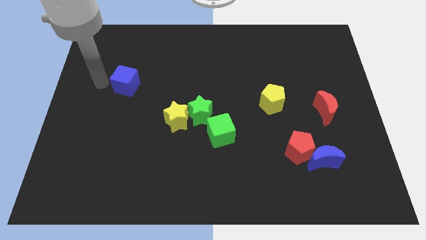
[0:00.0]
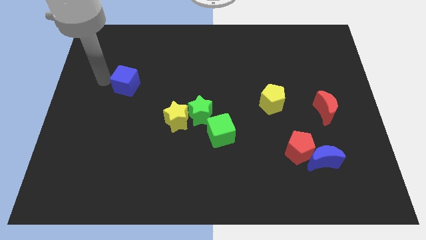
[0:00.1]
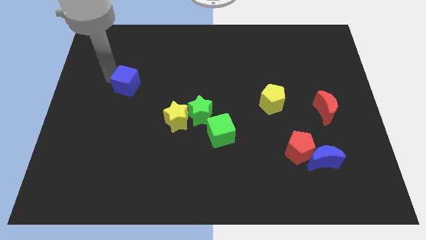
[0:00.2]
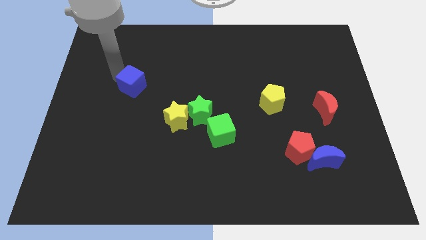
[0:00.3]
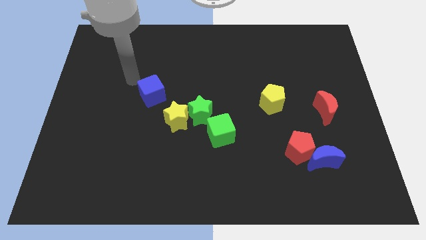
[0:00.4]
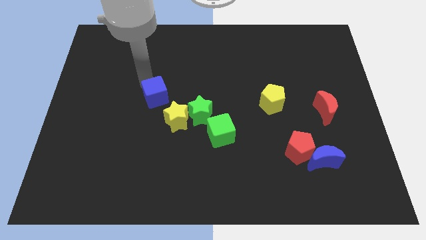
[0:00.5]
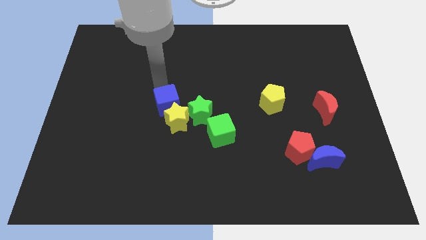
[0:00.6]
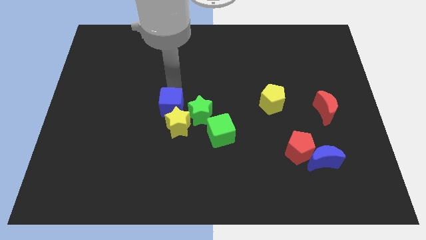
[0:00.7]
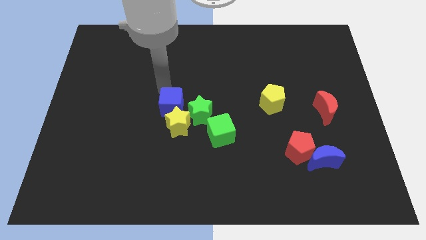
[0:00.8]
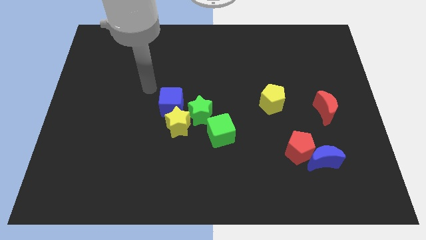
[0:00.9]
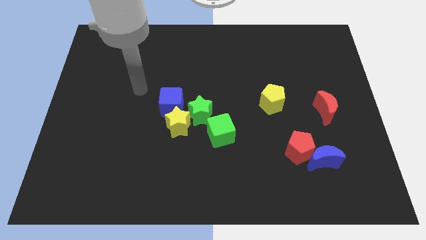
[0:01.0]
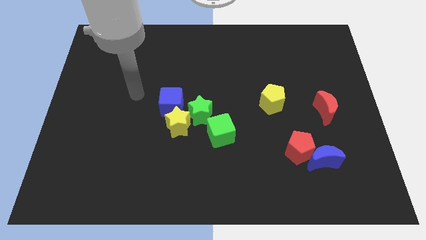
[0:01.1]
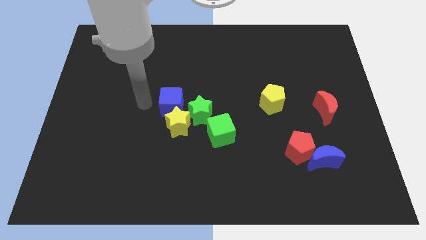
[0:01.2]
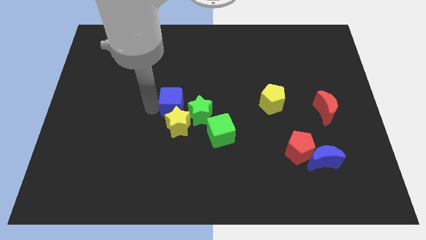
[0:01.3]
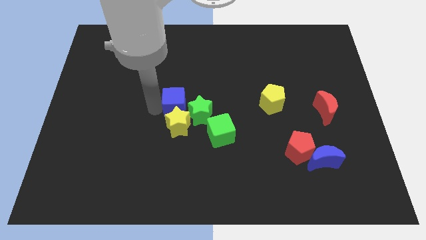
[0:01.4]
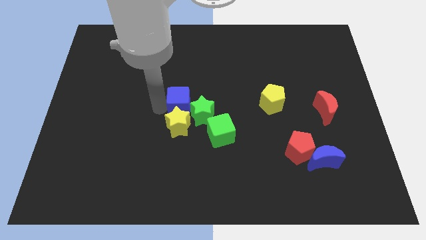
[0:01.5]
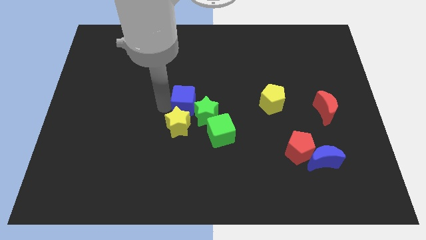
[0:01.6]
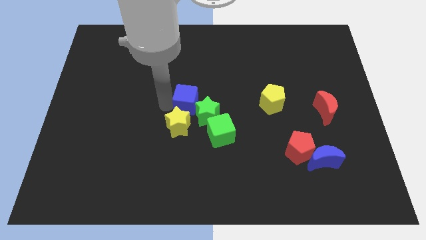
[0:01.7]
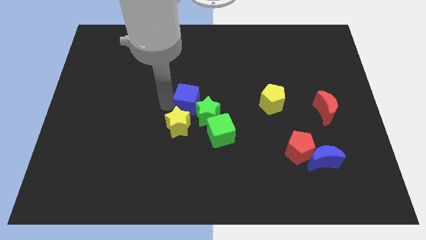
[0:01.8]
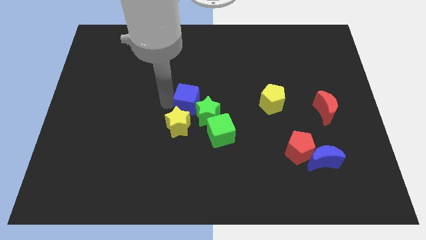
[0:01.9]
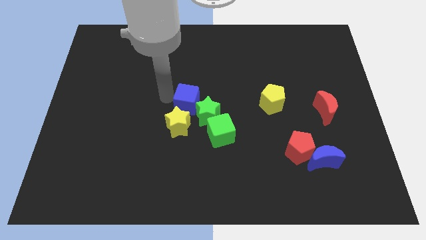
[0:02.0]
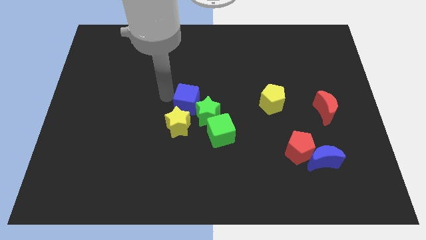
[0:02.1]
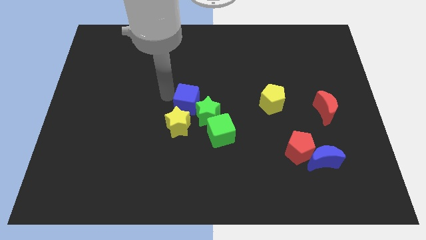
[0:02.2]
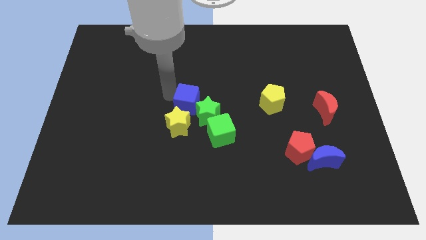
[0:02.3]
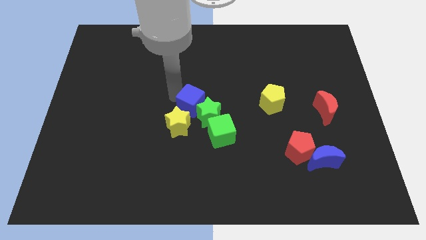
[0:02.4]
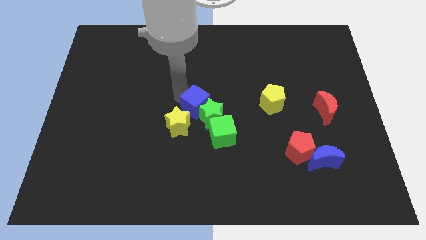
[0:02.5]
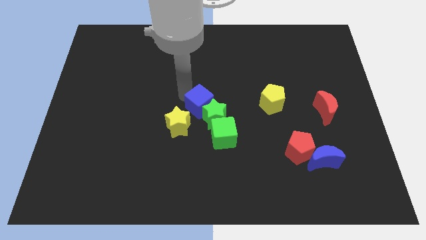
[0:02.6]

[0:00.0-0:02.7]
move the blue cube into the green star

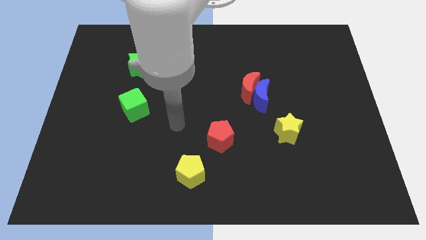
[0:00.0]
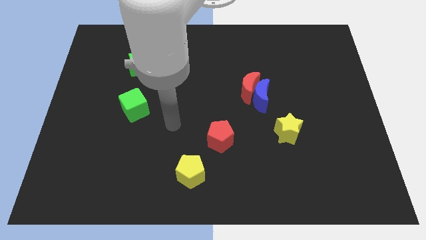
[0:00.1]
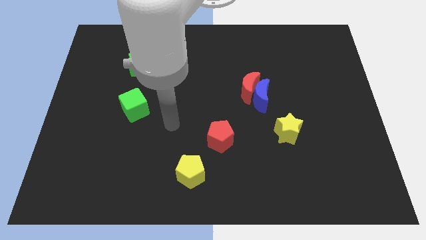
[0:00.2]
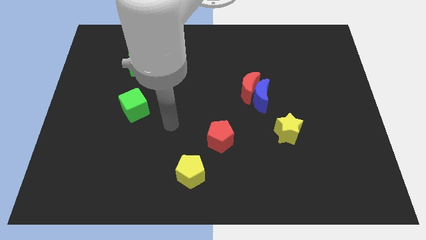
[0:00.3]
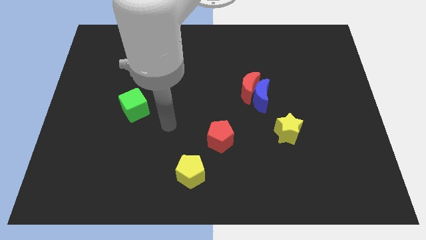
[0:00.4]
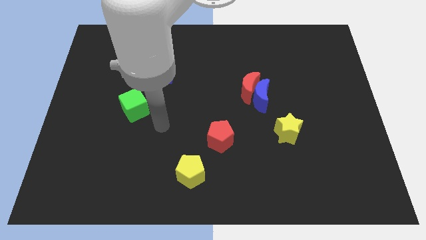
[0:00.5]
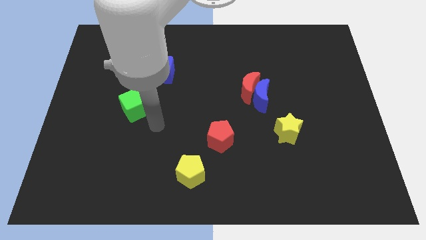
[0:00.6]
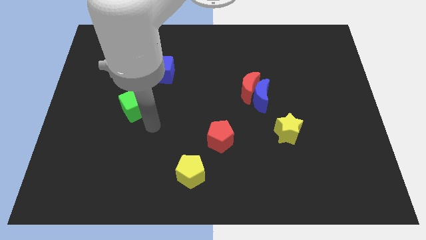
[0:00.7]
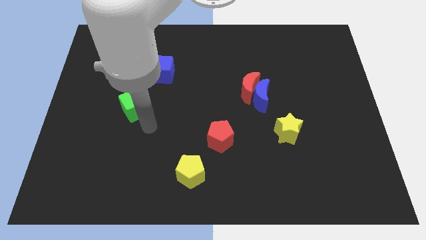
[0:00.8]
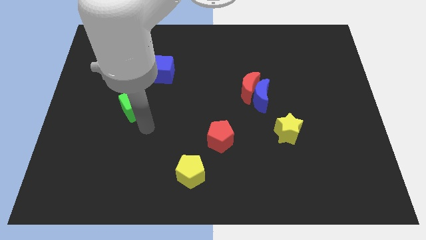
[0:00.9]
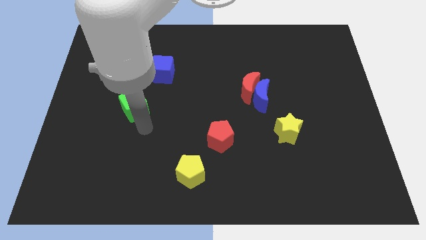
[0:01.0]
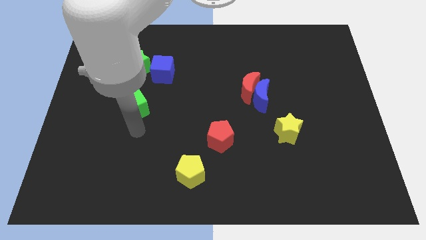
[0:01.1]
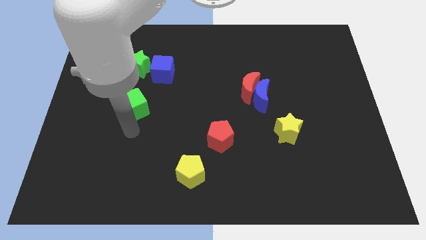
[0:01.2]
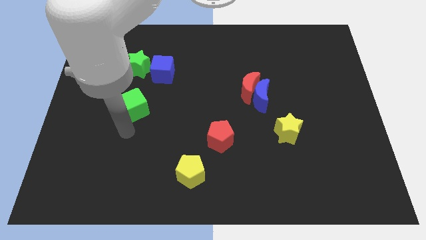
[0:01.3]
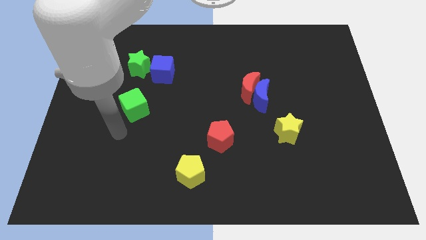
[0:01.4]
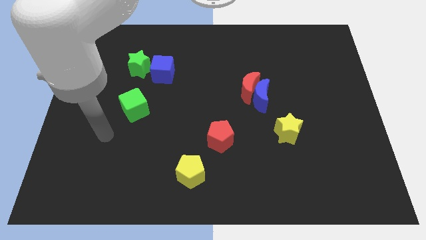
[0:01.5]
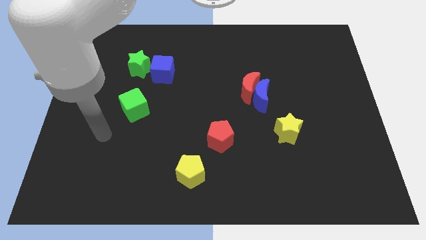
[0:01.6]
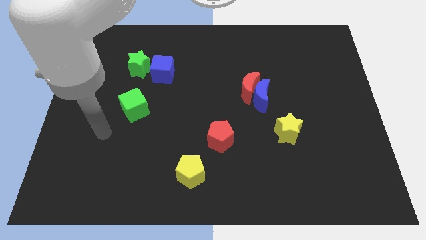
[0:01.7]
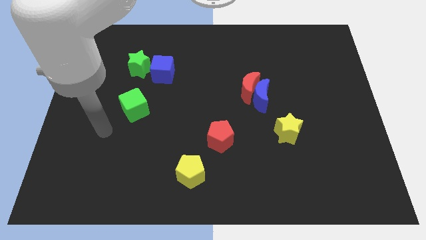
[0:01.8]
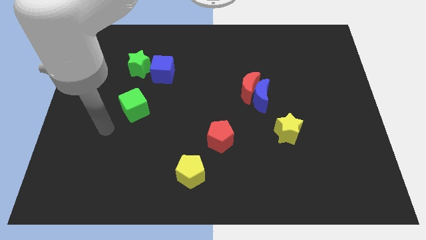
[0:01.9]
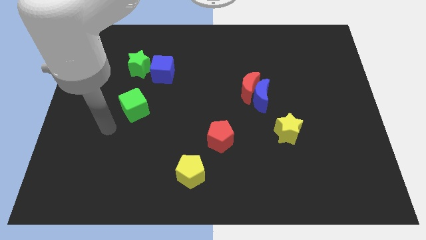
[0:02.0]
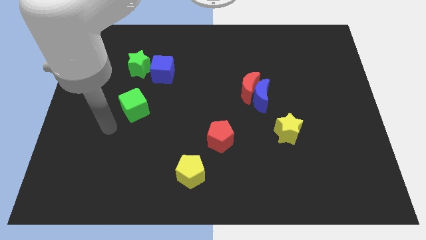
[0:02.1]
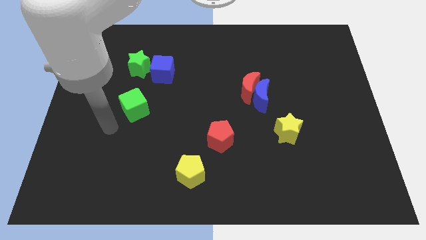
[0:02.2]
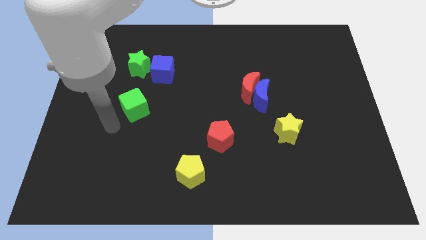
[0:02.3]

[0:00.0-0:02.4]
move your arm to the left of green cube

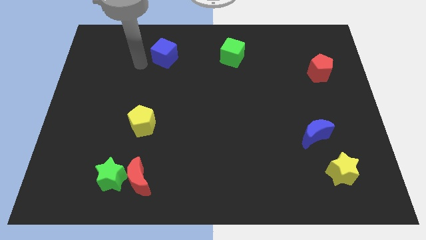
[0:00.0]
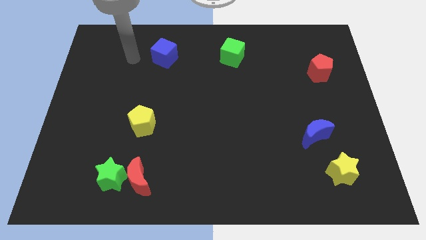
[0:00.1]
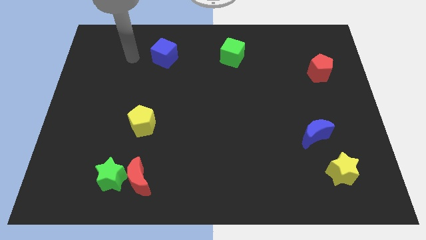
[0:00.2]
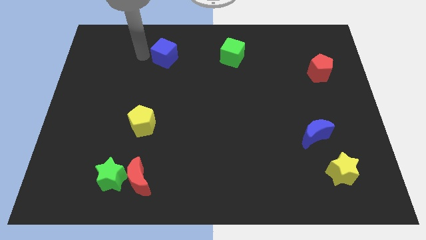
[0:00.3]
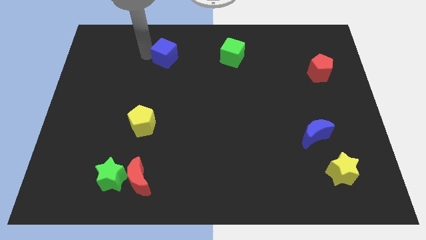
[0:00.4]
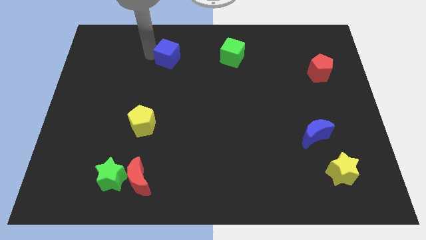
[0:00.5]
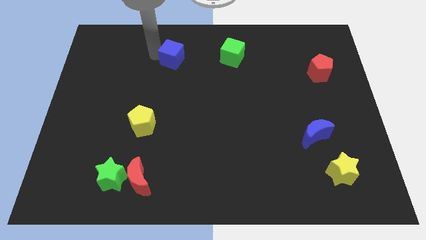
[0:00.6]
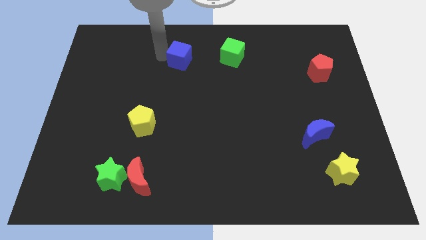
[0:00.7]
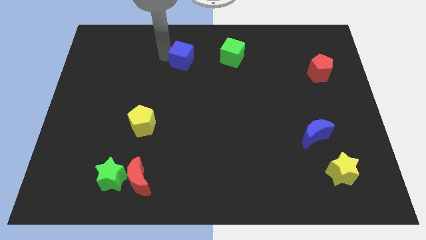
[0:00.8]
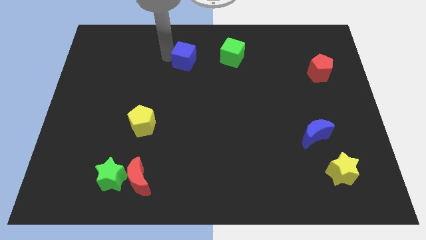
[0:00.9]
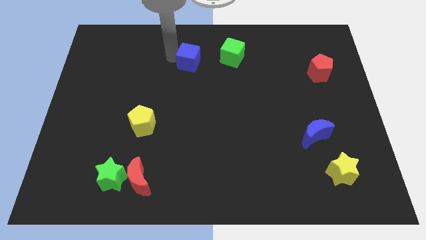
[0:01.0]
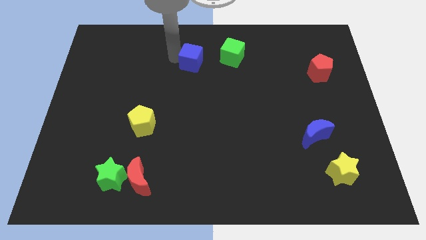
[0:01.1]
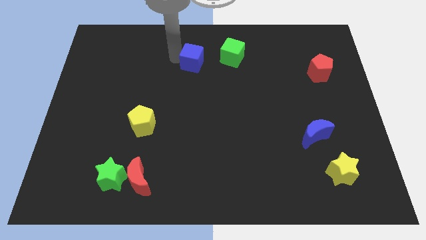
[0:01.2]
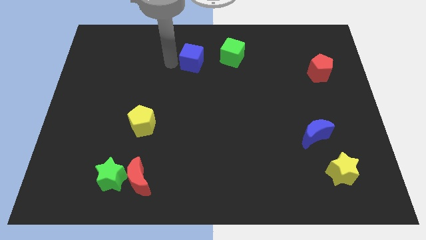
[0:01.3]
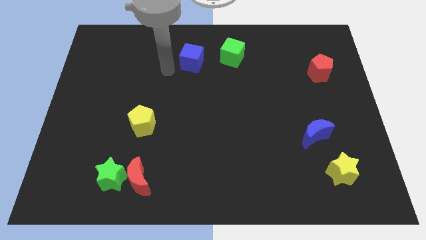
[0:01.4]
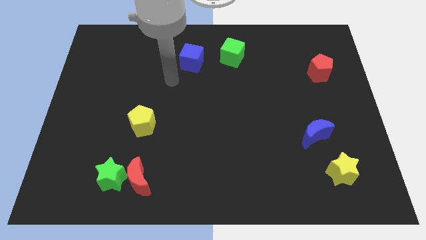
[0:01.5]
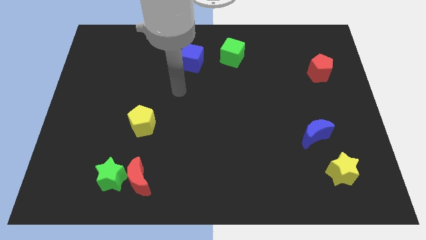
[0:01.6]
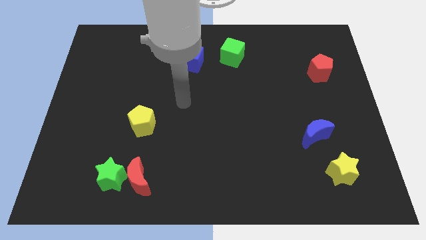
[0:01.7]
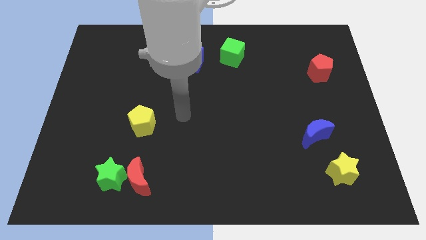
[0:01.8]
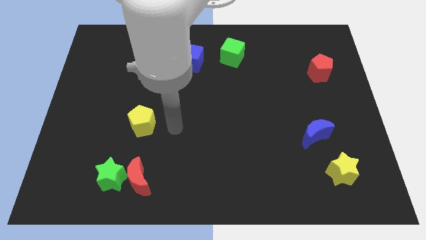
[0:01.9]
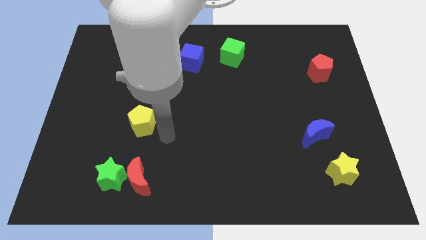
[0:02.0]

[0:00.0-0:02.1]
slide the blue cube at the left side of the green cube

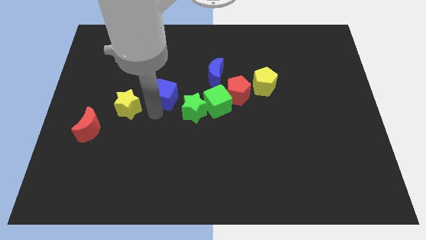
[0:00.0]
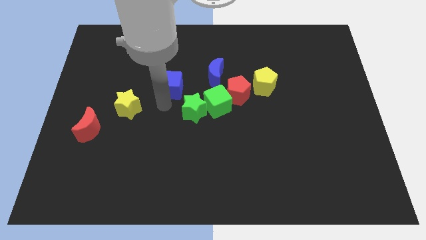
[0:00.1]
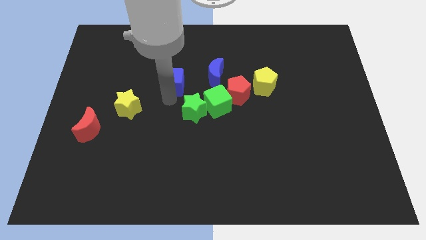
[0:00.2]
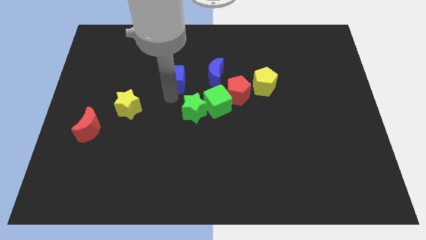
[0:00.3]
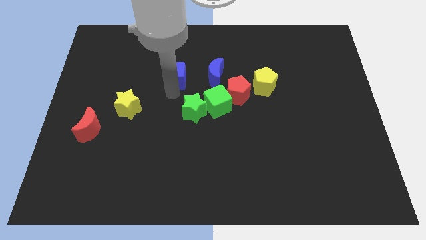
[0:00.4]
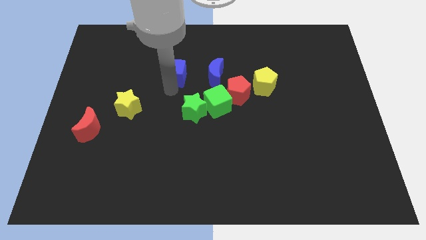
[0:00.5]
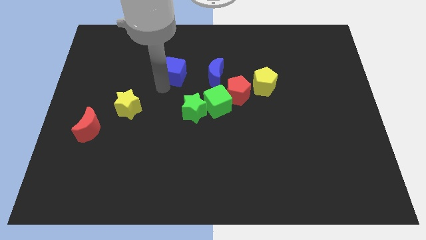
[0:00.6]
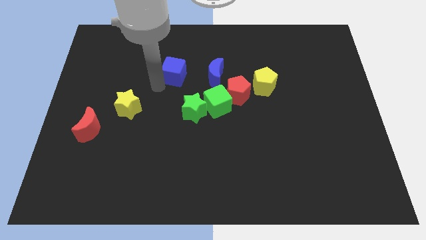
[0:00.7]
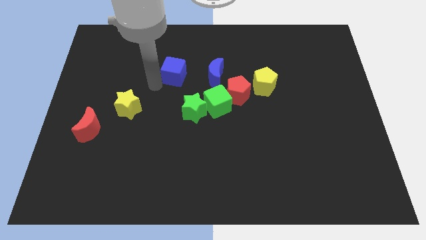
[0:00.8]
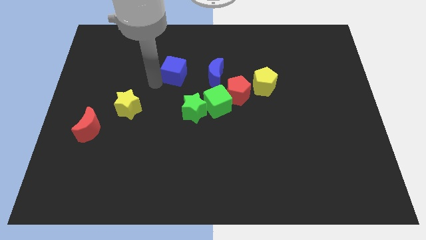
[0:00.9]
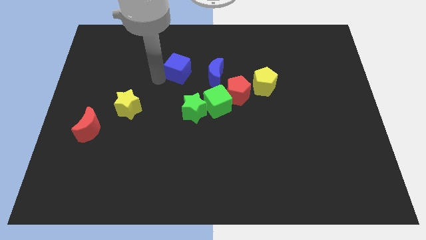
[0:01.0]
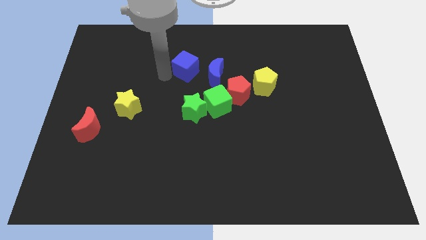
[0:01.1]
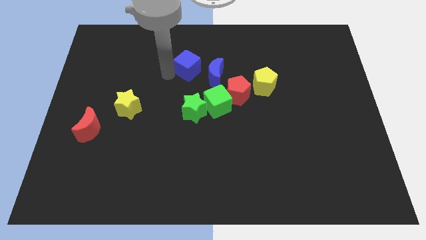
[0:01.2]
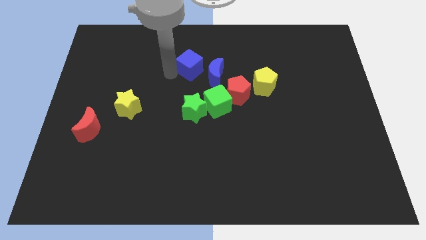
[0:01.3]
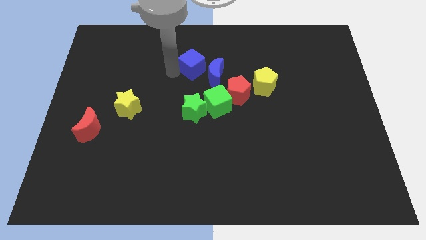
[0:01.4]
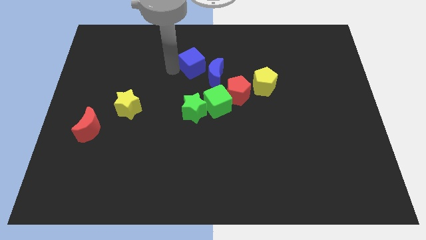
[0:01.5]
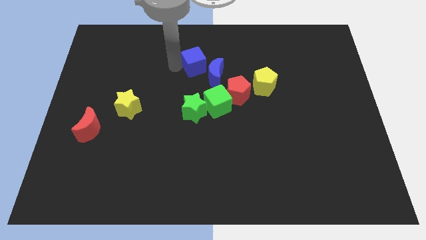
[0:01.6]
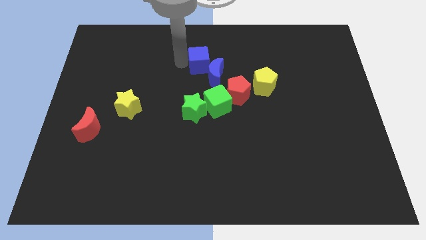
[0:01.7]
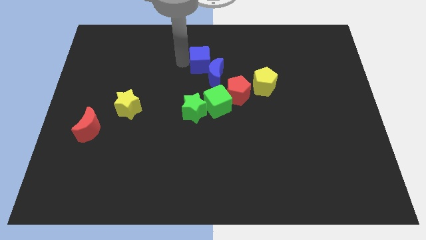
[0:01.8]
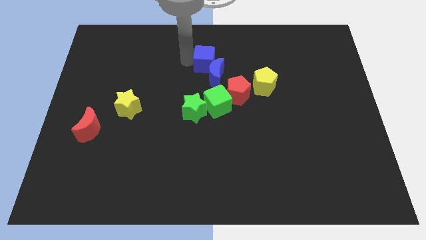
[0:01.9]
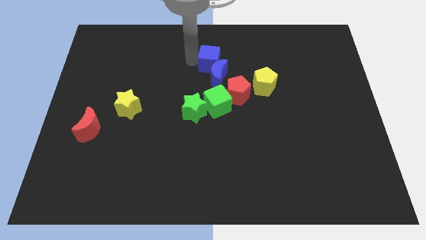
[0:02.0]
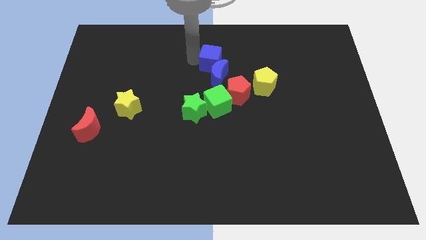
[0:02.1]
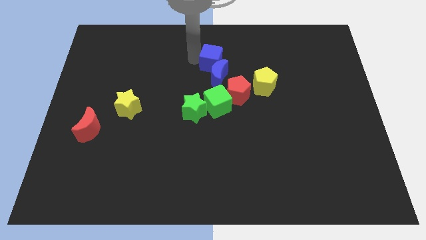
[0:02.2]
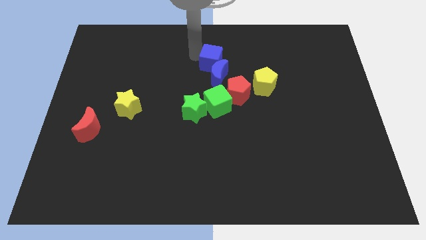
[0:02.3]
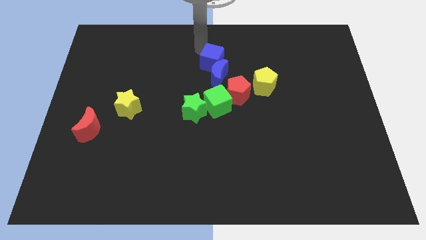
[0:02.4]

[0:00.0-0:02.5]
push the blue cube towards the top of blue crescent
